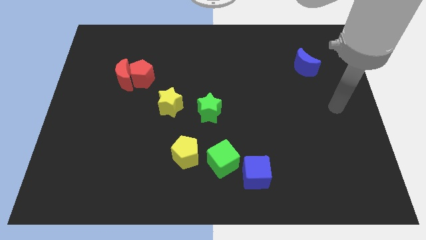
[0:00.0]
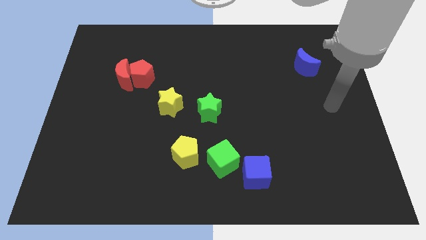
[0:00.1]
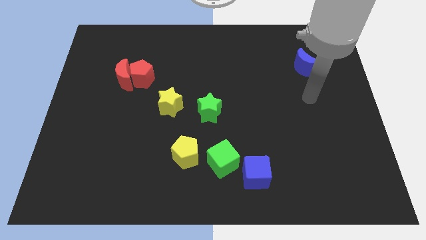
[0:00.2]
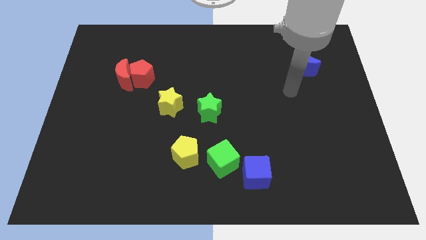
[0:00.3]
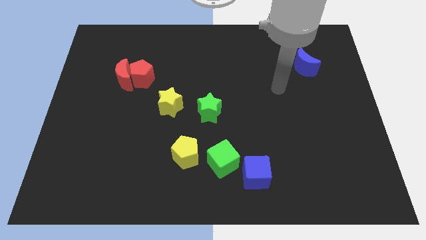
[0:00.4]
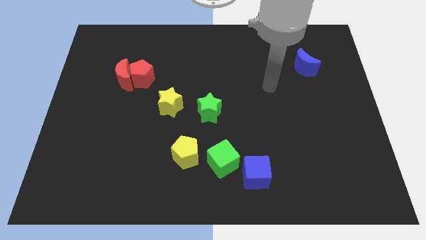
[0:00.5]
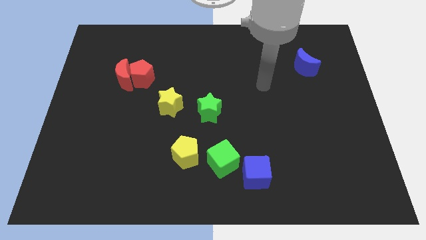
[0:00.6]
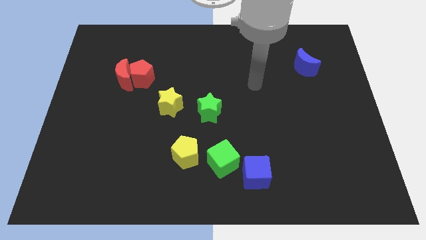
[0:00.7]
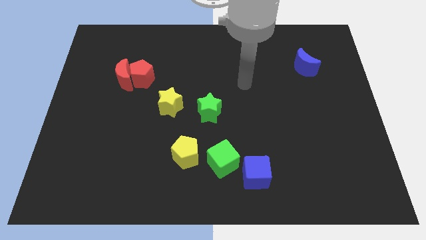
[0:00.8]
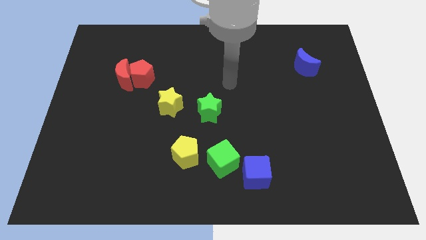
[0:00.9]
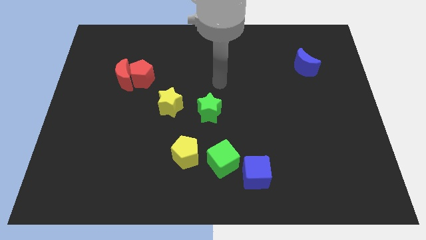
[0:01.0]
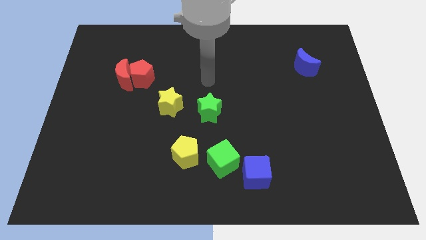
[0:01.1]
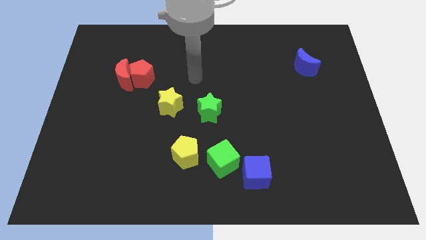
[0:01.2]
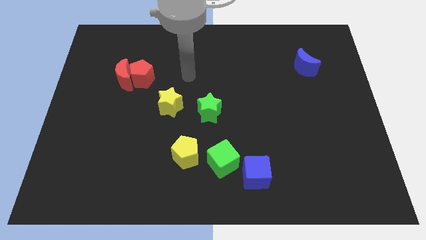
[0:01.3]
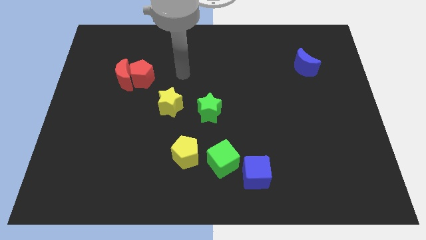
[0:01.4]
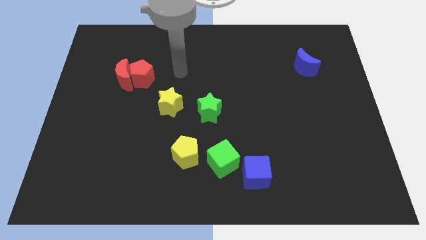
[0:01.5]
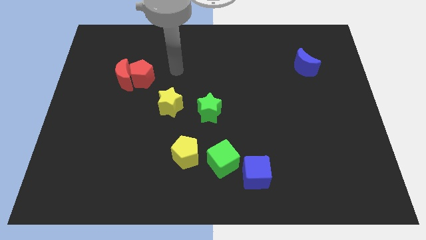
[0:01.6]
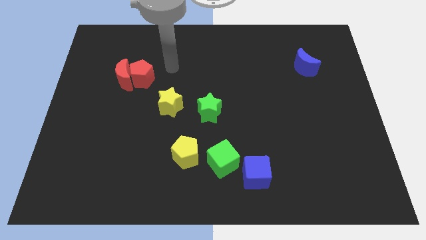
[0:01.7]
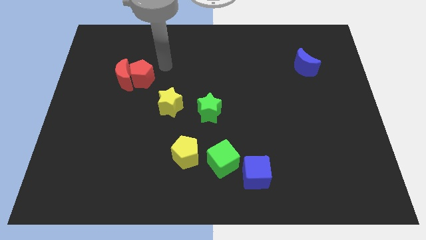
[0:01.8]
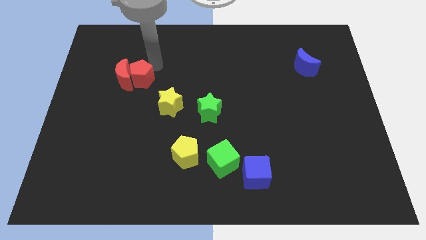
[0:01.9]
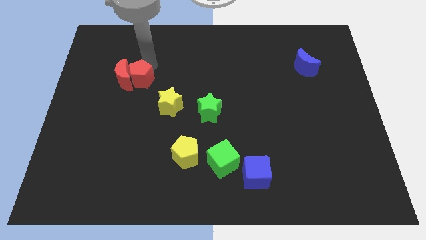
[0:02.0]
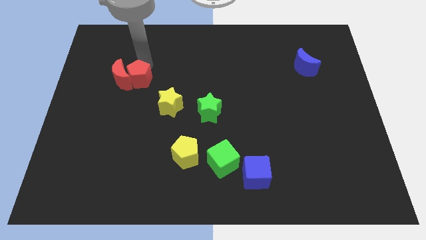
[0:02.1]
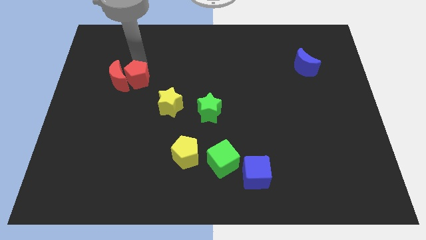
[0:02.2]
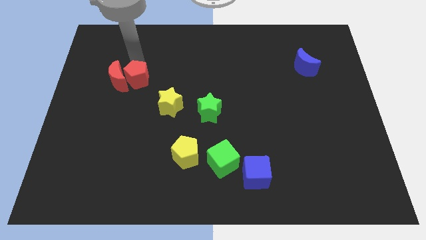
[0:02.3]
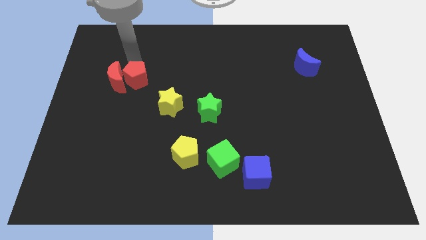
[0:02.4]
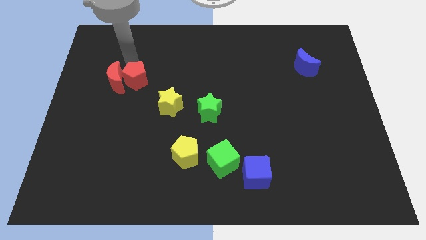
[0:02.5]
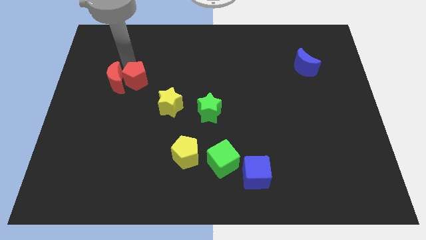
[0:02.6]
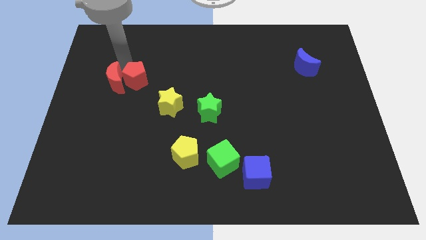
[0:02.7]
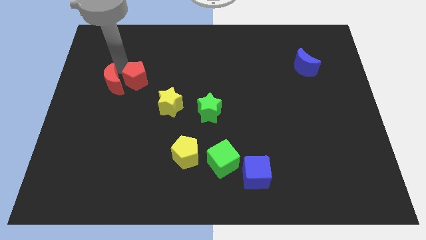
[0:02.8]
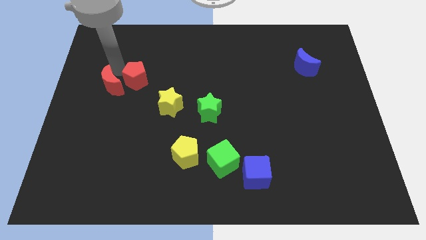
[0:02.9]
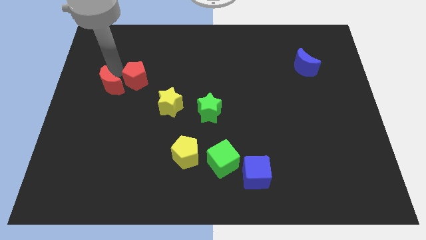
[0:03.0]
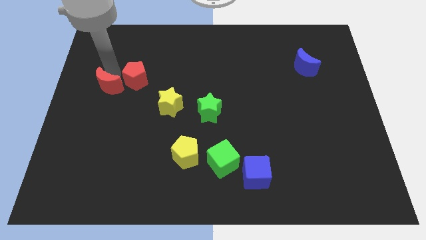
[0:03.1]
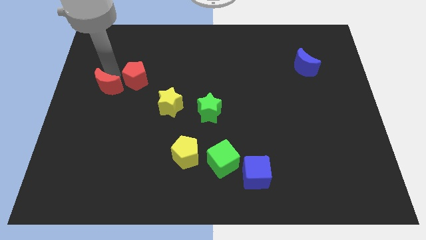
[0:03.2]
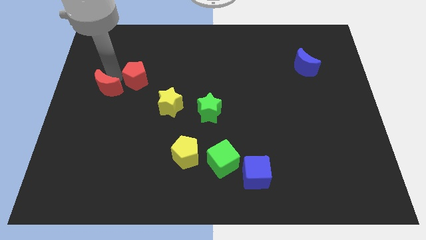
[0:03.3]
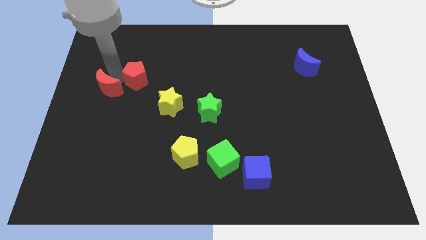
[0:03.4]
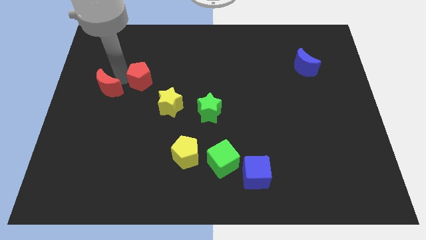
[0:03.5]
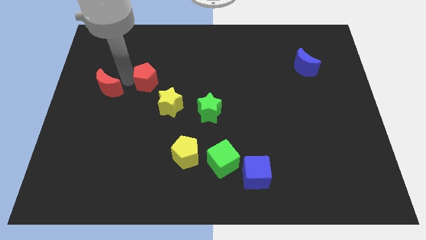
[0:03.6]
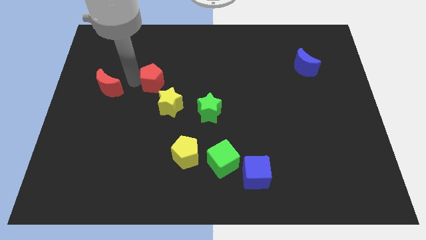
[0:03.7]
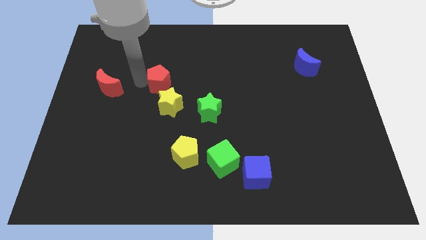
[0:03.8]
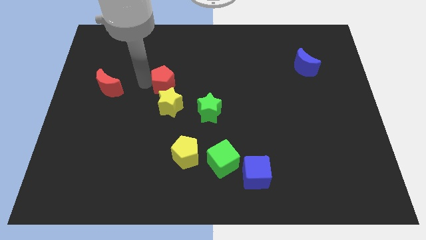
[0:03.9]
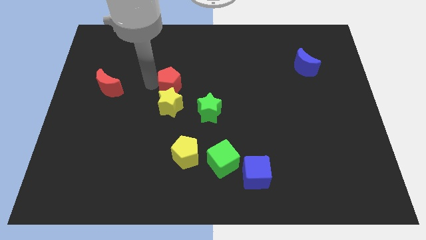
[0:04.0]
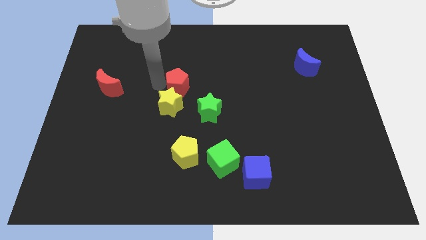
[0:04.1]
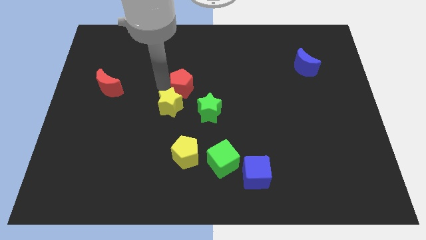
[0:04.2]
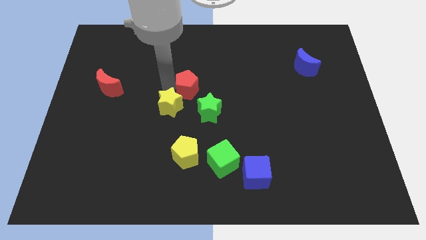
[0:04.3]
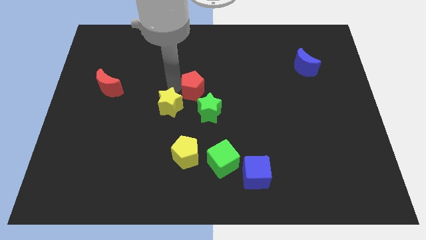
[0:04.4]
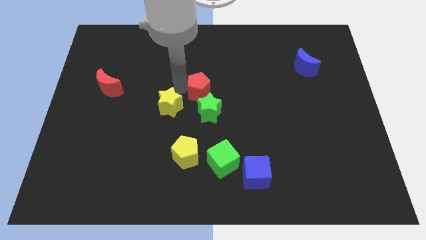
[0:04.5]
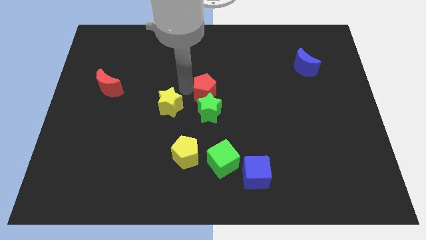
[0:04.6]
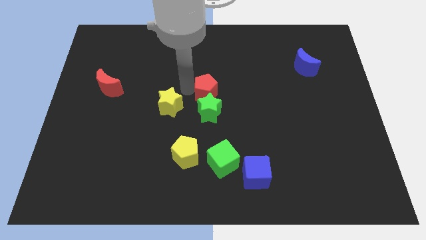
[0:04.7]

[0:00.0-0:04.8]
push the red pentagon to the green star

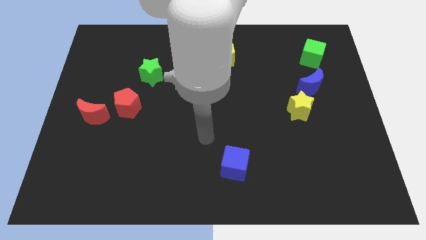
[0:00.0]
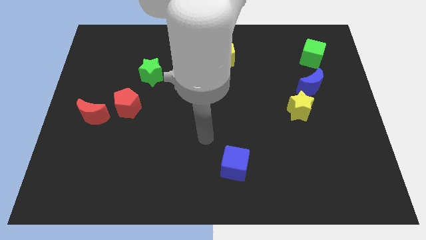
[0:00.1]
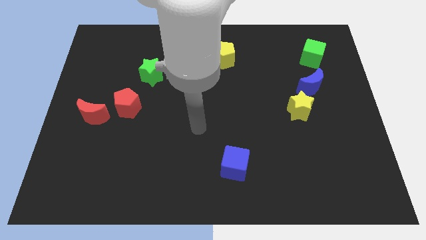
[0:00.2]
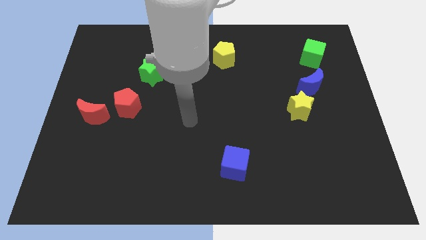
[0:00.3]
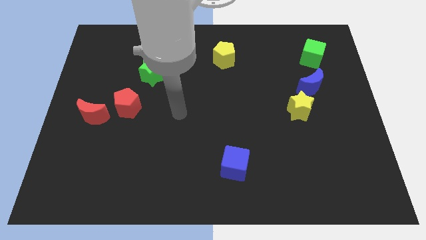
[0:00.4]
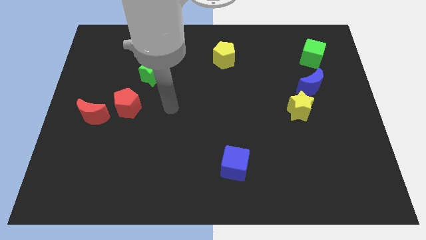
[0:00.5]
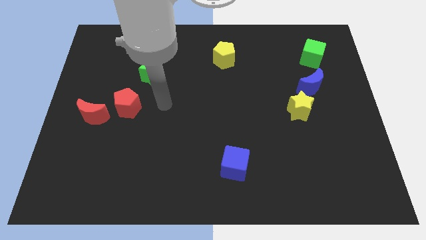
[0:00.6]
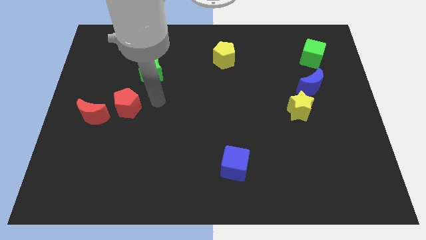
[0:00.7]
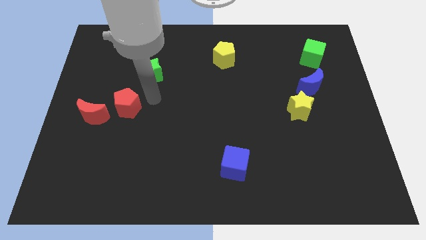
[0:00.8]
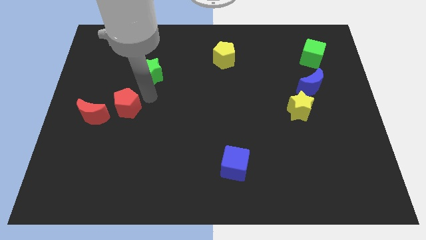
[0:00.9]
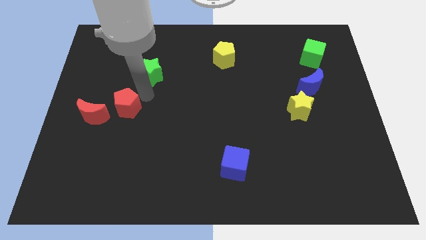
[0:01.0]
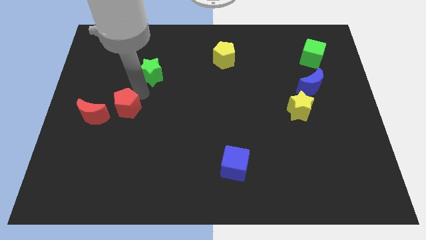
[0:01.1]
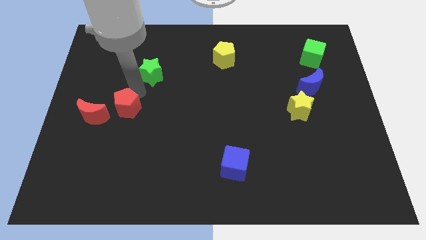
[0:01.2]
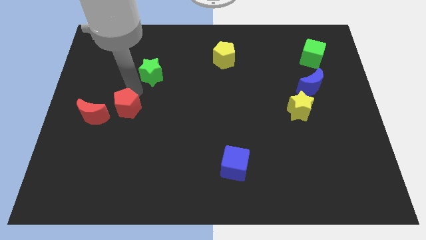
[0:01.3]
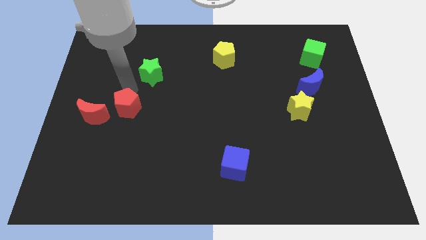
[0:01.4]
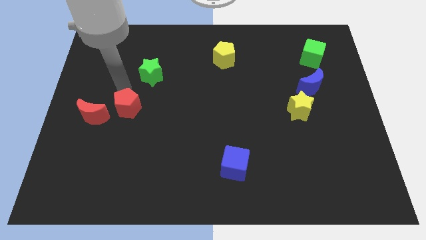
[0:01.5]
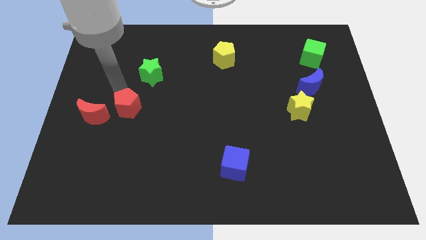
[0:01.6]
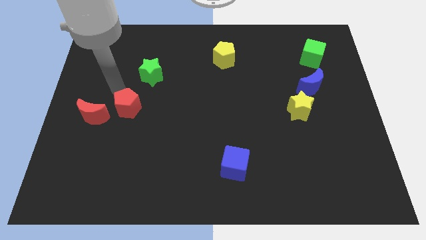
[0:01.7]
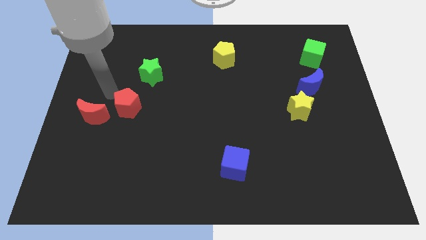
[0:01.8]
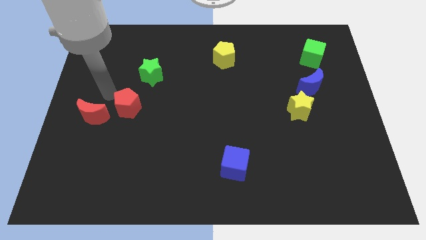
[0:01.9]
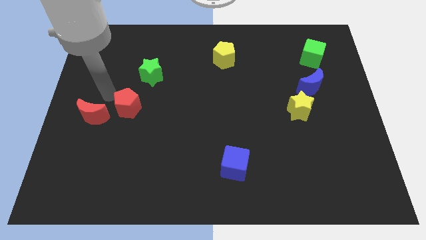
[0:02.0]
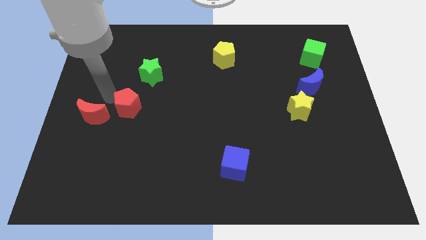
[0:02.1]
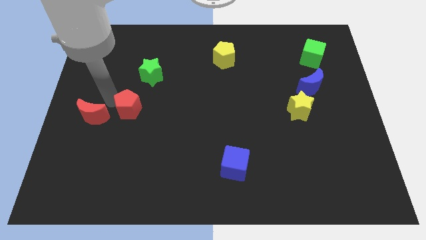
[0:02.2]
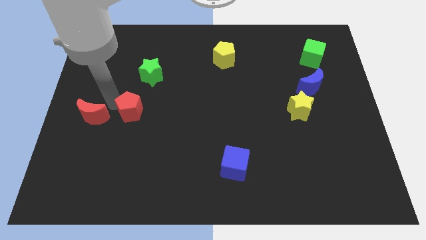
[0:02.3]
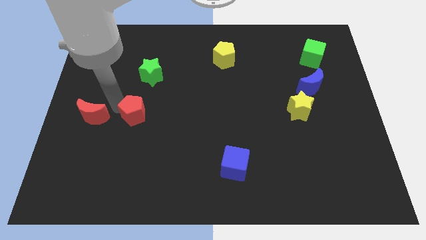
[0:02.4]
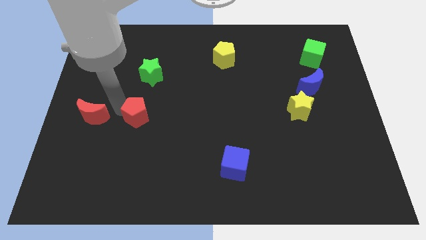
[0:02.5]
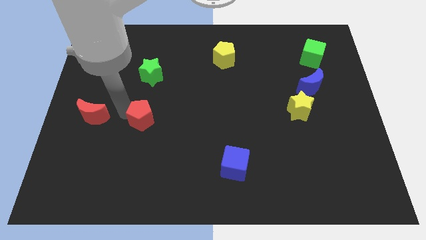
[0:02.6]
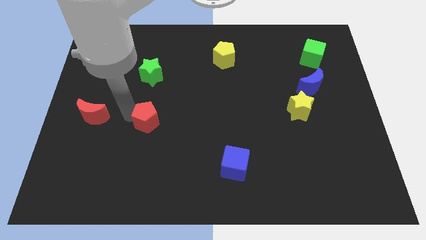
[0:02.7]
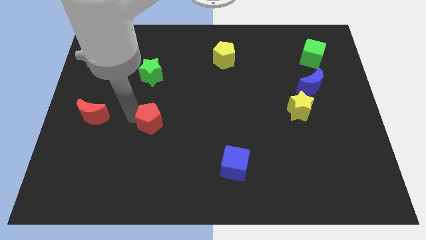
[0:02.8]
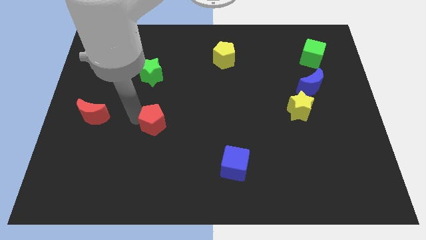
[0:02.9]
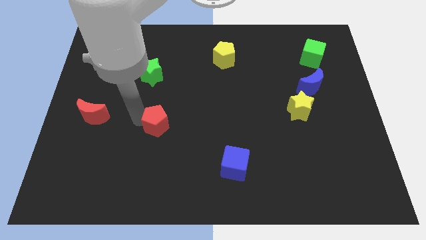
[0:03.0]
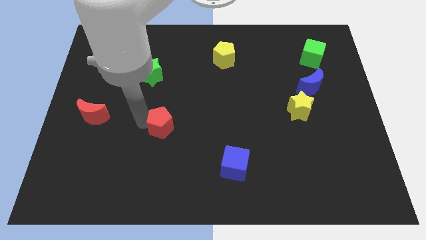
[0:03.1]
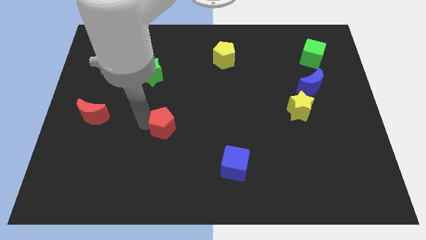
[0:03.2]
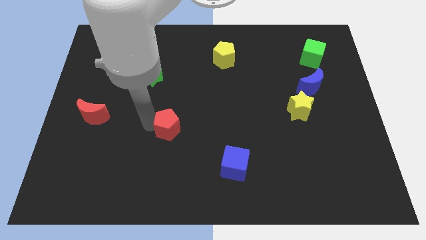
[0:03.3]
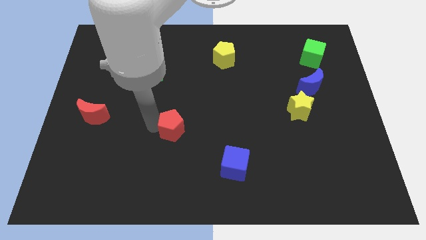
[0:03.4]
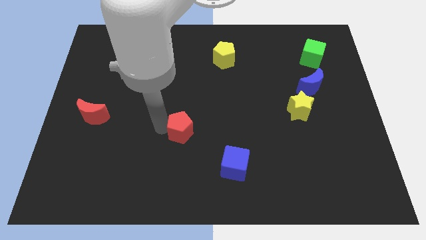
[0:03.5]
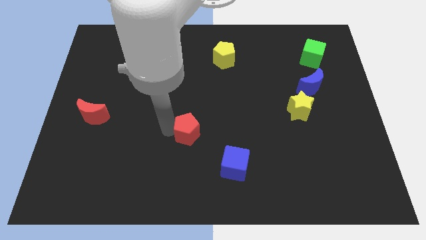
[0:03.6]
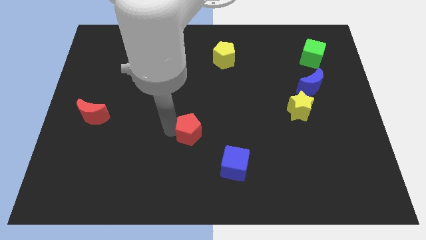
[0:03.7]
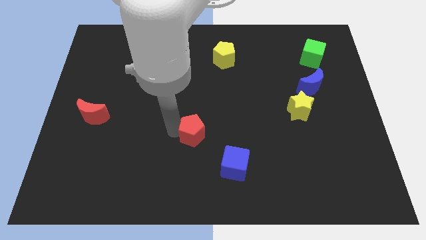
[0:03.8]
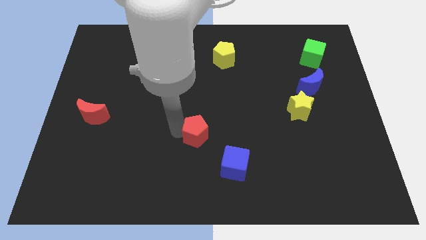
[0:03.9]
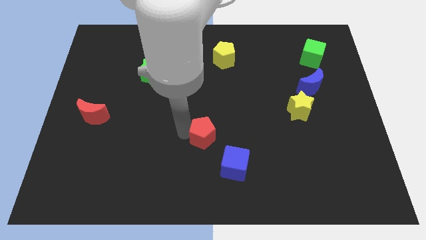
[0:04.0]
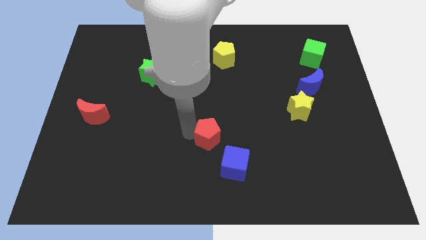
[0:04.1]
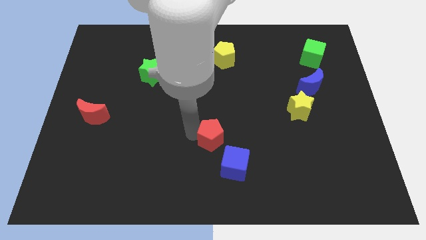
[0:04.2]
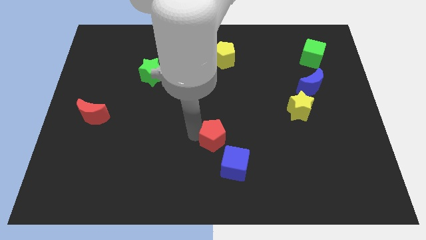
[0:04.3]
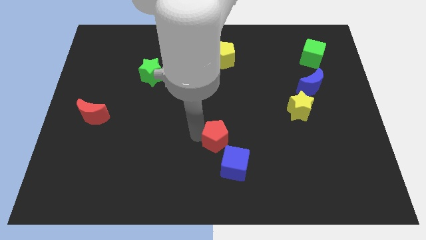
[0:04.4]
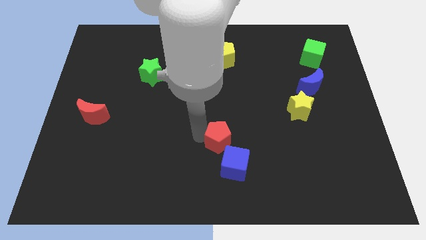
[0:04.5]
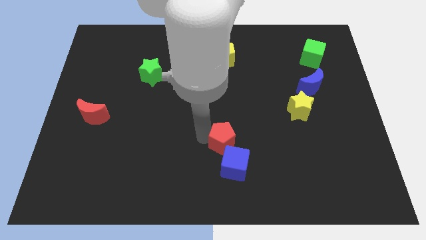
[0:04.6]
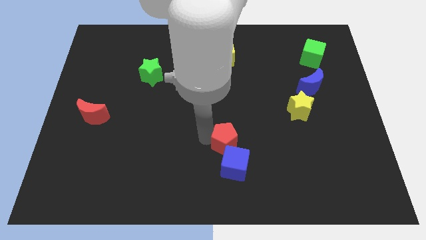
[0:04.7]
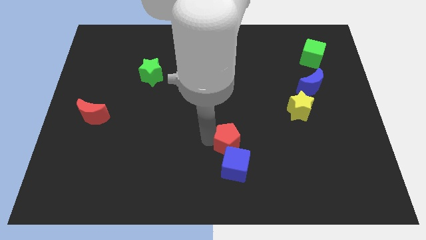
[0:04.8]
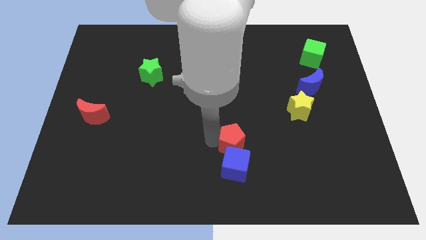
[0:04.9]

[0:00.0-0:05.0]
slide the red pentagon to the blue cube
